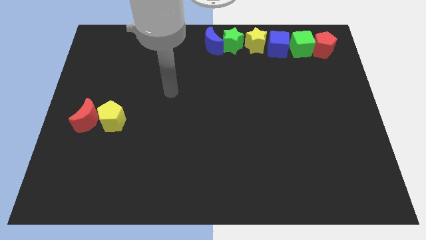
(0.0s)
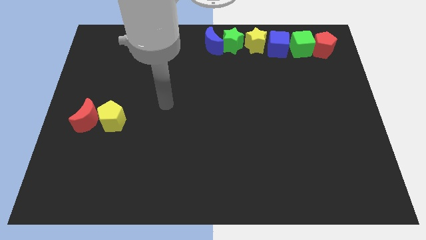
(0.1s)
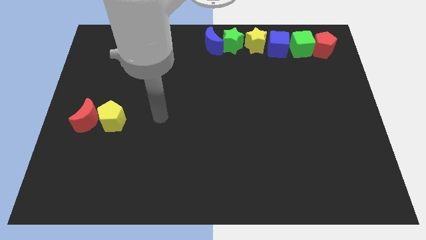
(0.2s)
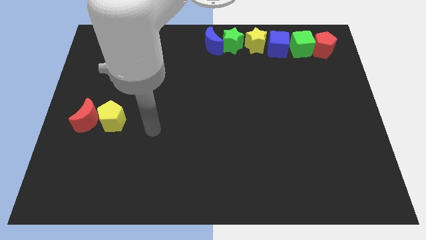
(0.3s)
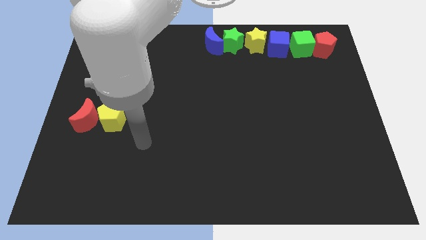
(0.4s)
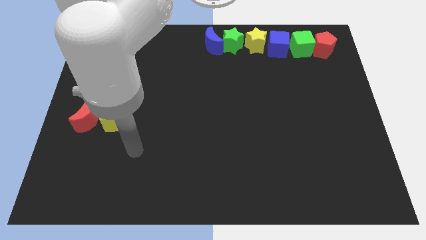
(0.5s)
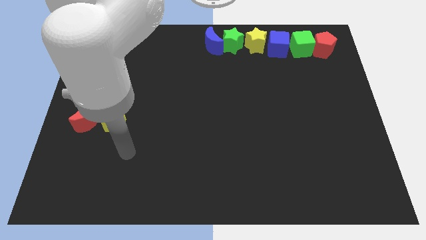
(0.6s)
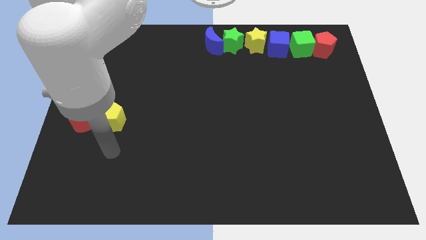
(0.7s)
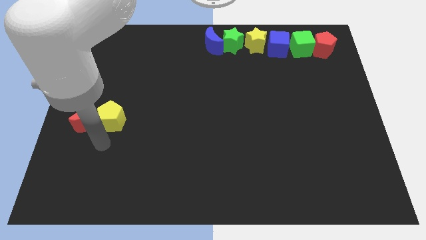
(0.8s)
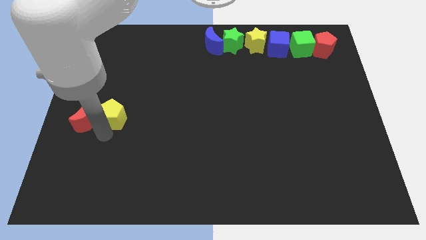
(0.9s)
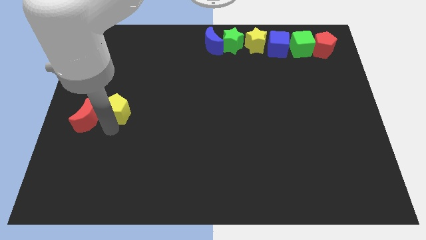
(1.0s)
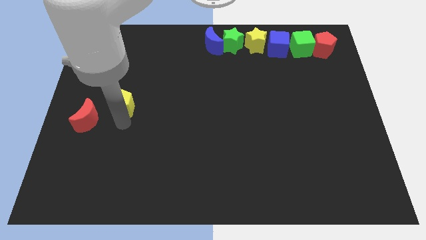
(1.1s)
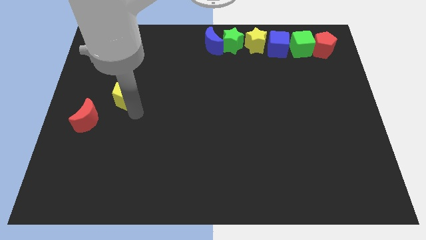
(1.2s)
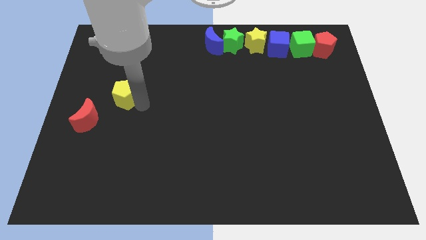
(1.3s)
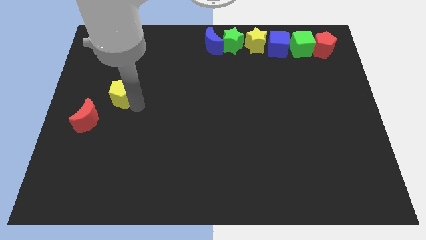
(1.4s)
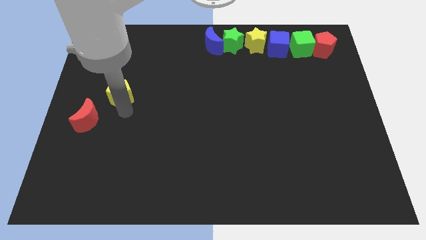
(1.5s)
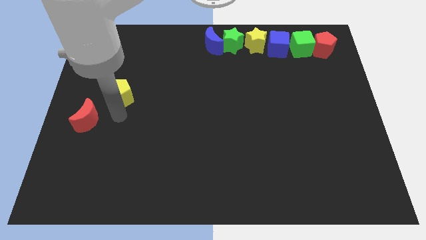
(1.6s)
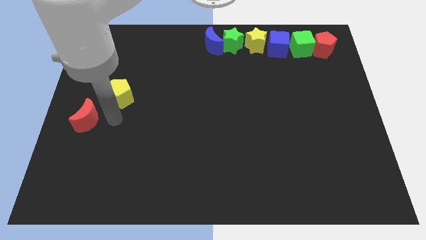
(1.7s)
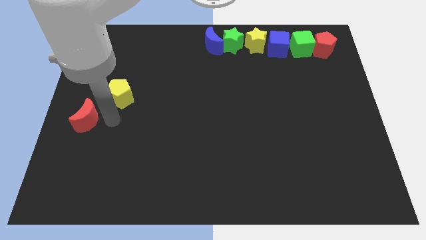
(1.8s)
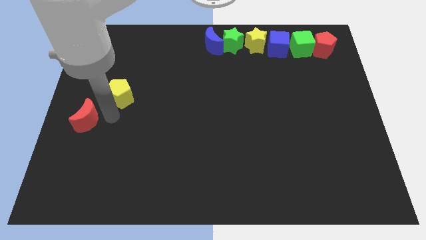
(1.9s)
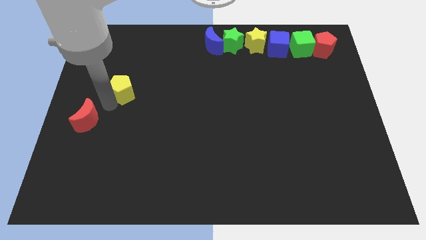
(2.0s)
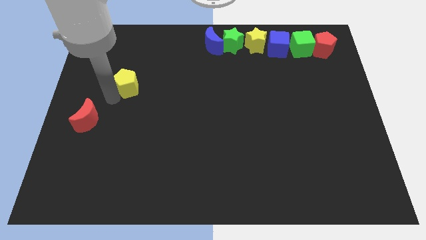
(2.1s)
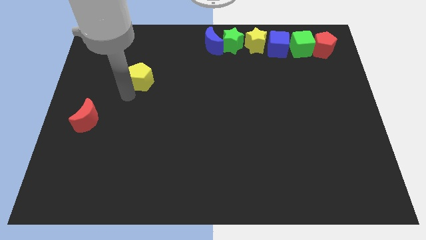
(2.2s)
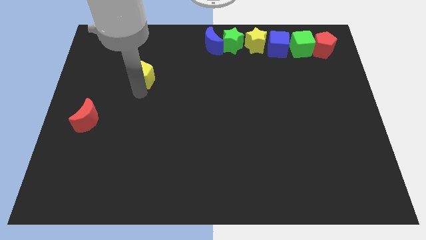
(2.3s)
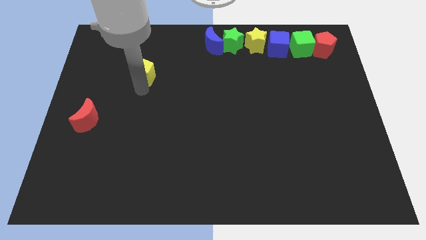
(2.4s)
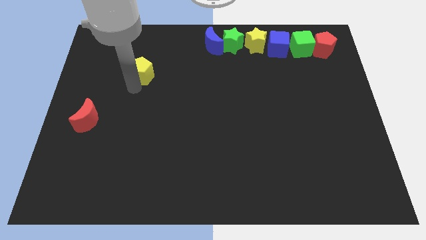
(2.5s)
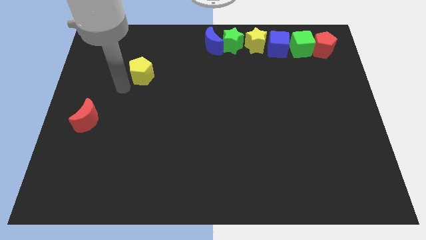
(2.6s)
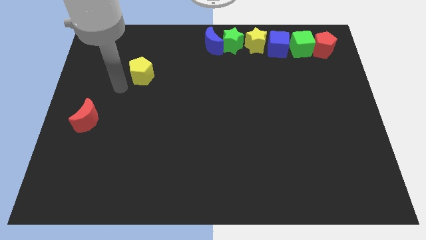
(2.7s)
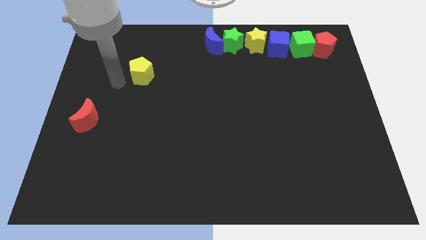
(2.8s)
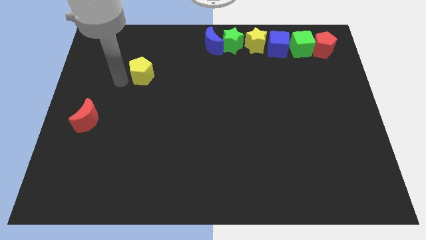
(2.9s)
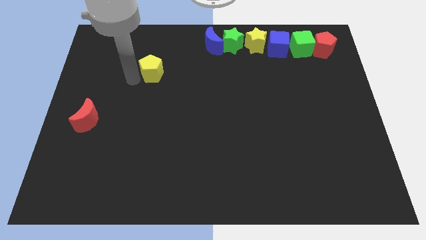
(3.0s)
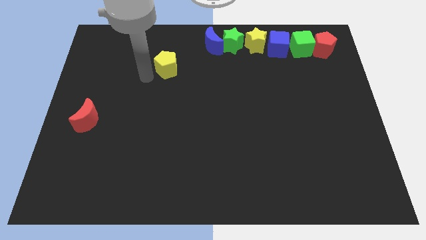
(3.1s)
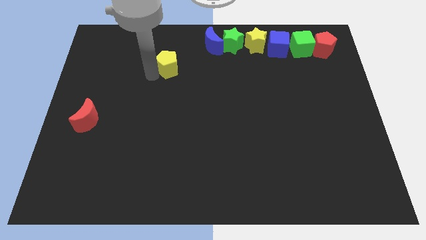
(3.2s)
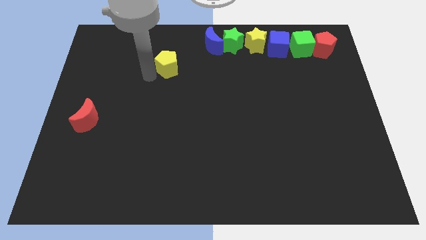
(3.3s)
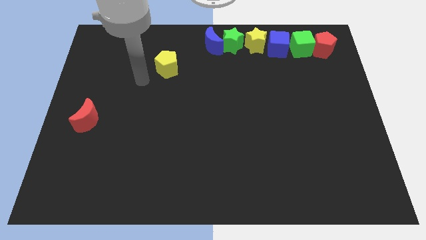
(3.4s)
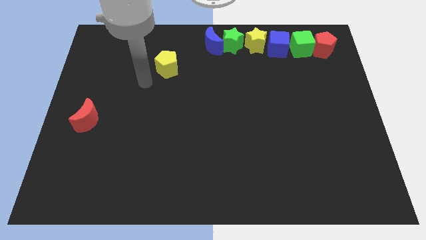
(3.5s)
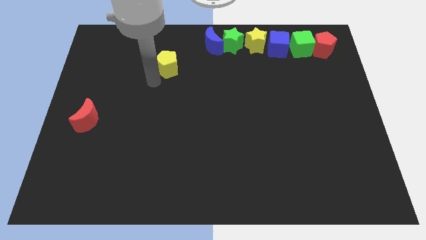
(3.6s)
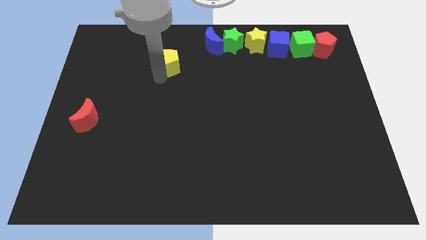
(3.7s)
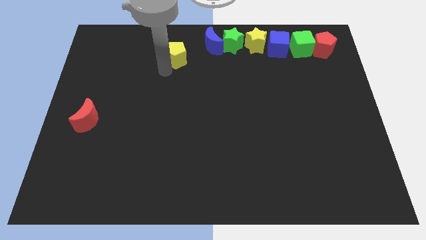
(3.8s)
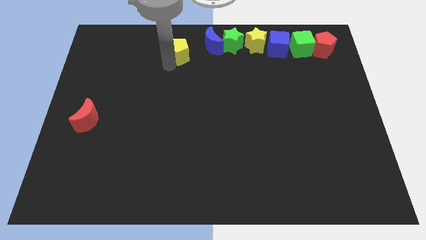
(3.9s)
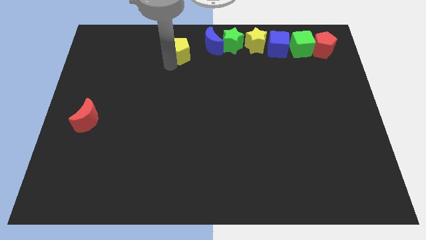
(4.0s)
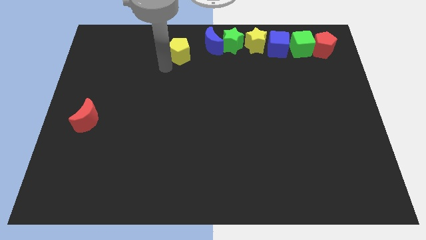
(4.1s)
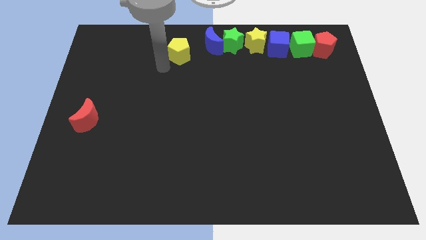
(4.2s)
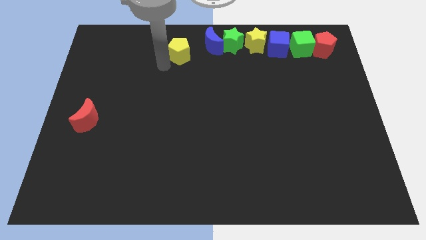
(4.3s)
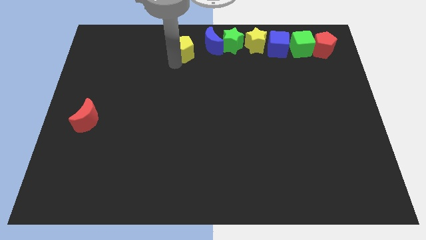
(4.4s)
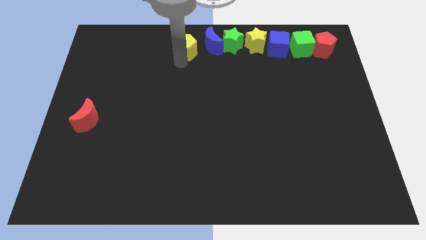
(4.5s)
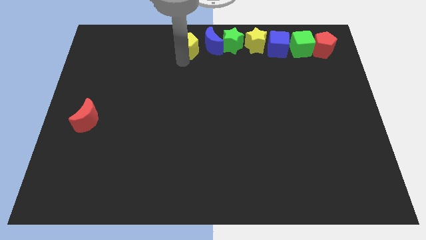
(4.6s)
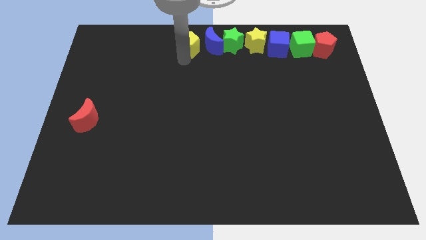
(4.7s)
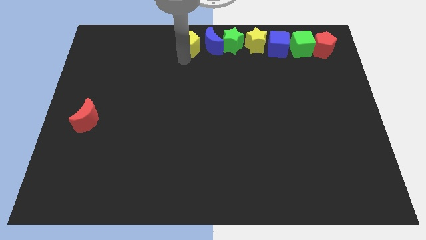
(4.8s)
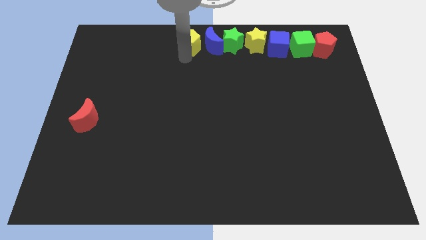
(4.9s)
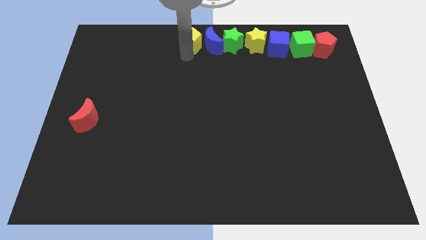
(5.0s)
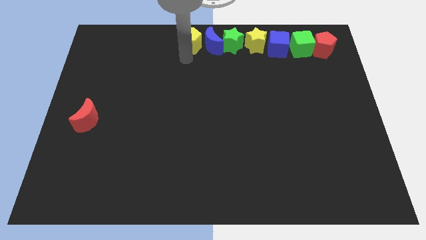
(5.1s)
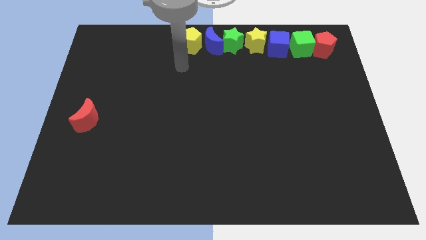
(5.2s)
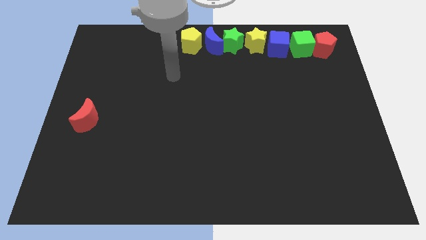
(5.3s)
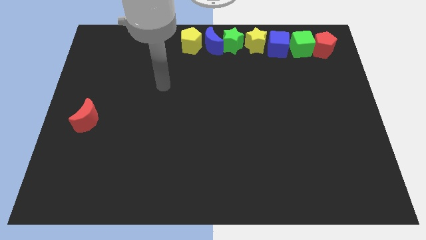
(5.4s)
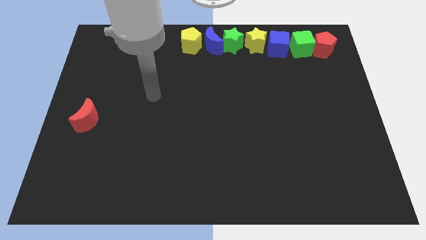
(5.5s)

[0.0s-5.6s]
drag the yellow pentagon to the left of the blue moon

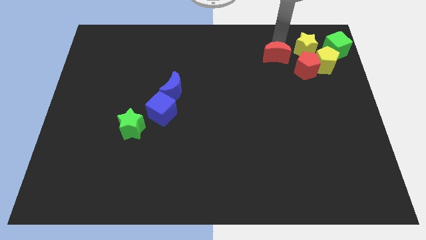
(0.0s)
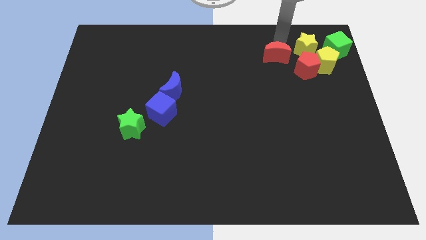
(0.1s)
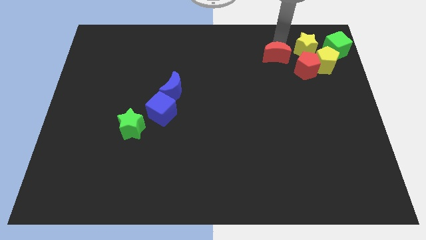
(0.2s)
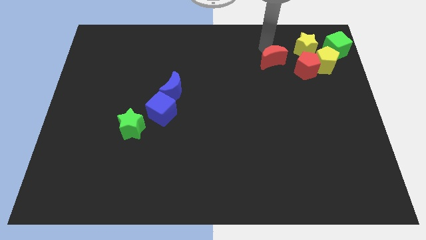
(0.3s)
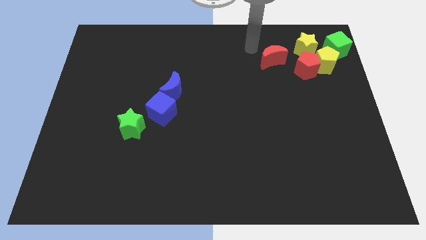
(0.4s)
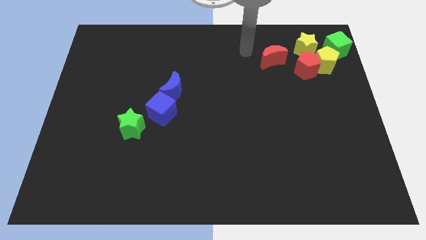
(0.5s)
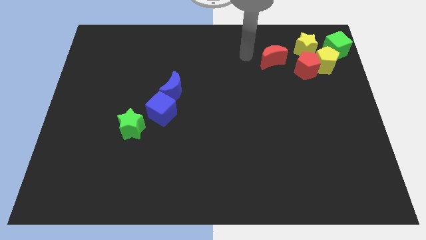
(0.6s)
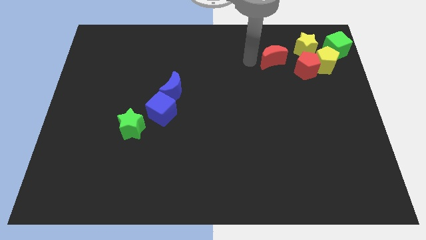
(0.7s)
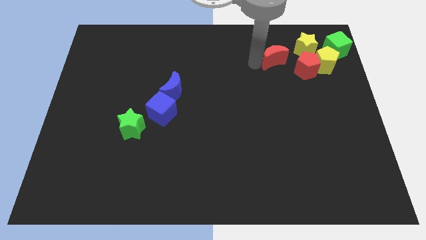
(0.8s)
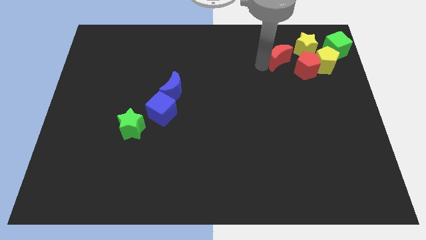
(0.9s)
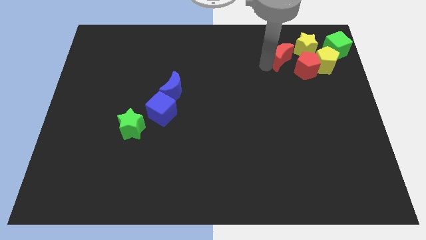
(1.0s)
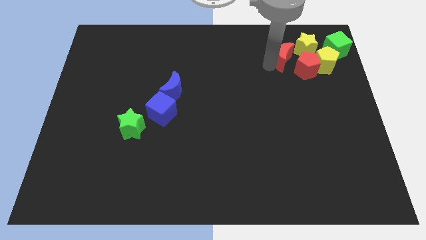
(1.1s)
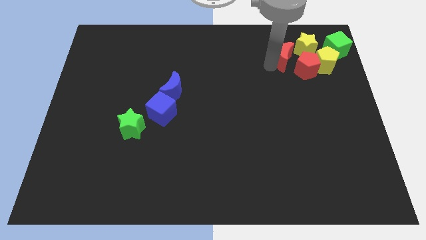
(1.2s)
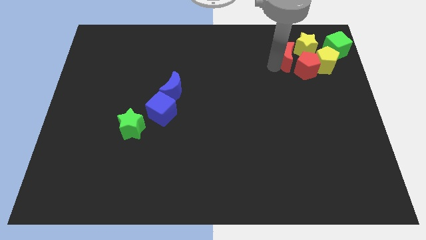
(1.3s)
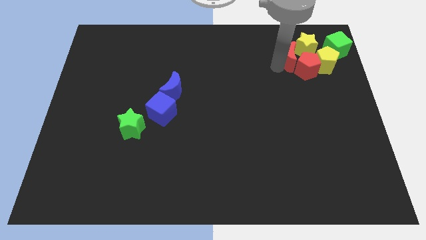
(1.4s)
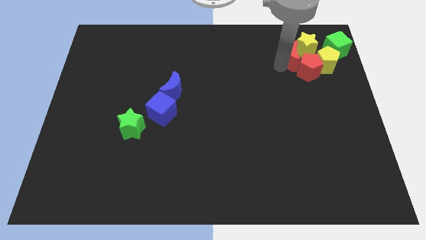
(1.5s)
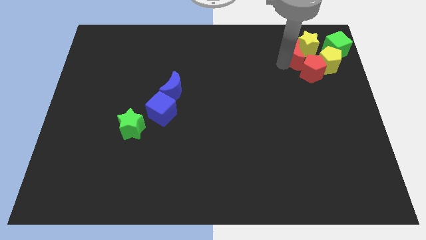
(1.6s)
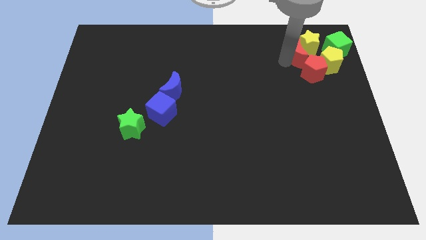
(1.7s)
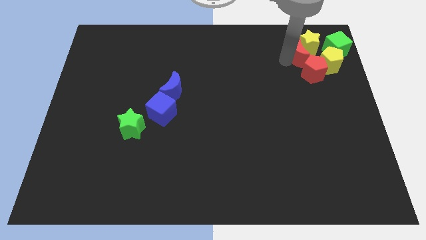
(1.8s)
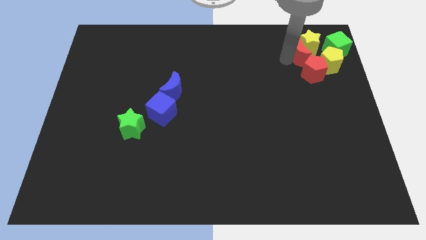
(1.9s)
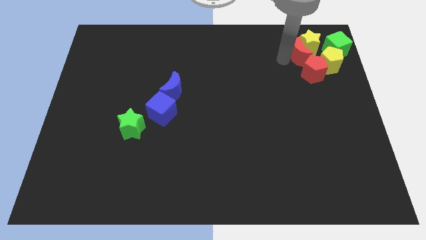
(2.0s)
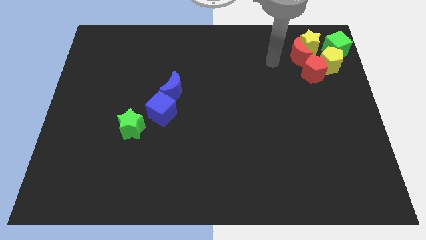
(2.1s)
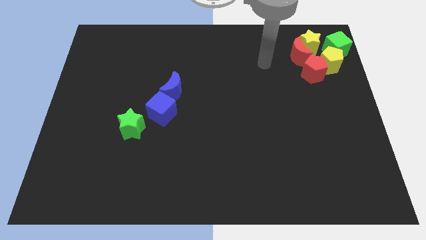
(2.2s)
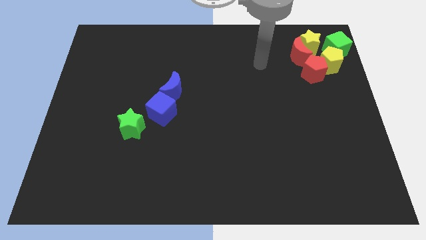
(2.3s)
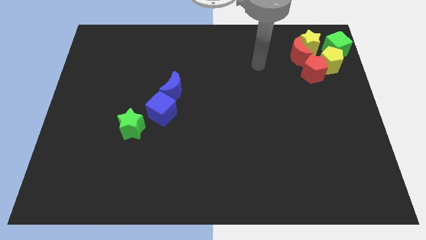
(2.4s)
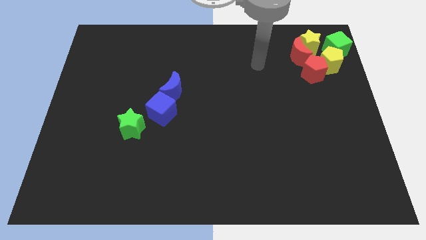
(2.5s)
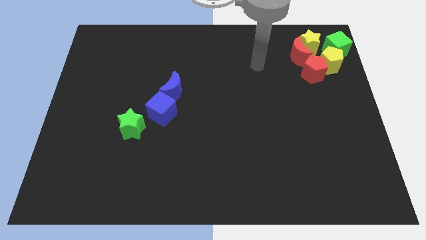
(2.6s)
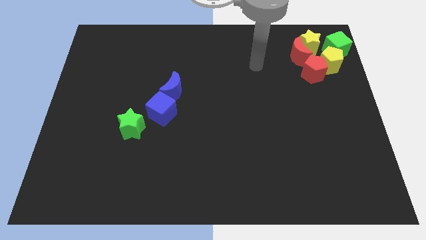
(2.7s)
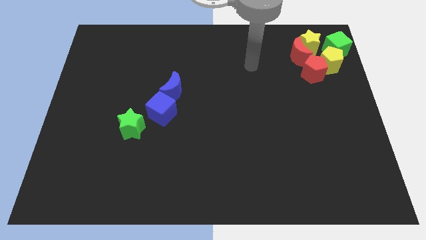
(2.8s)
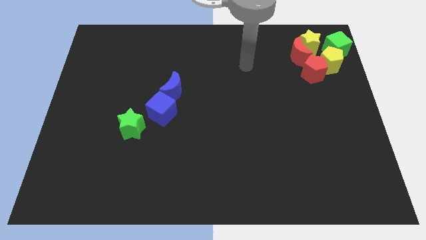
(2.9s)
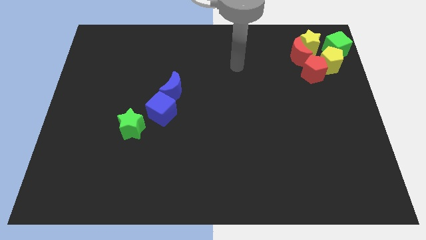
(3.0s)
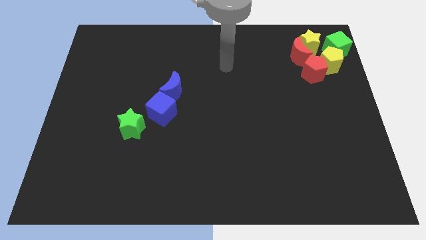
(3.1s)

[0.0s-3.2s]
push the red moon into the yellow star

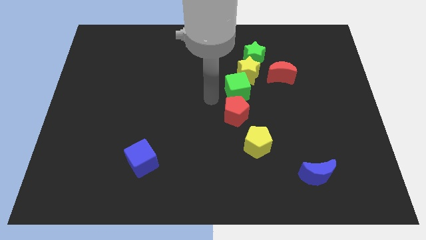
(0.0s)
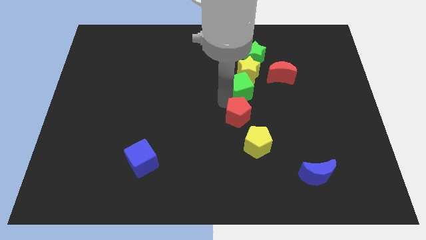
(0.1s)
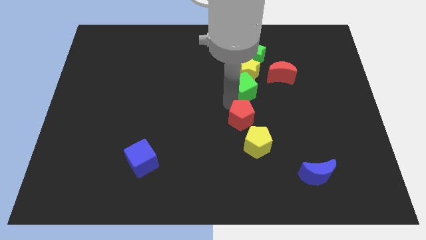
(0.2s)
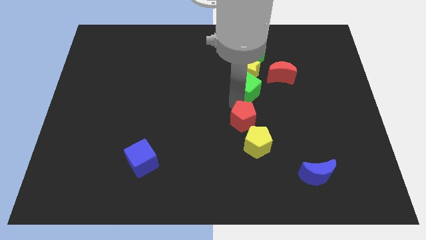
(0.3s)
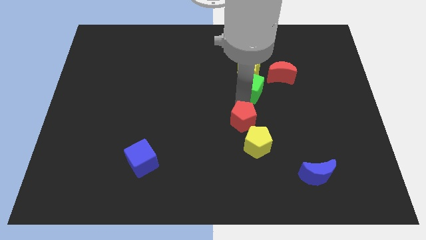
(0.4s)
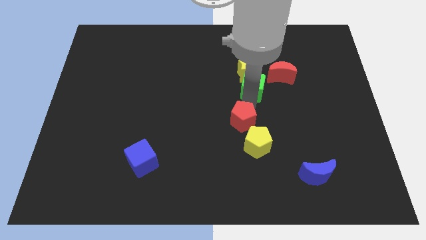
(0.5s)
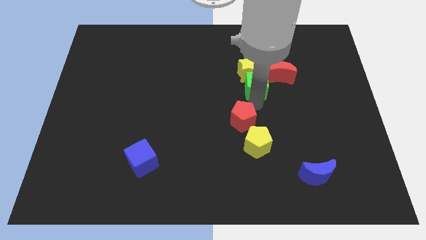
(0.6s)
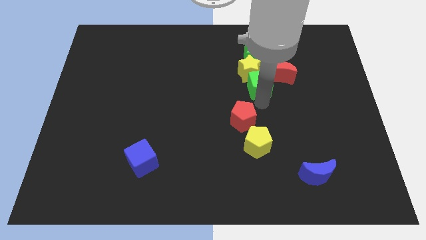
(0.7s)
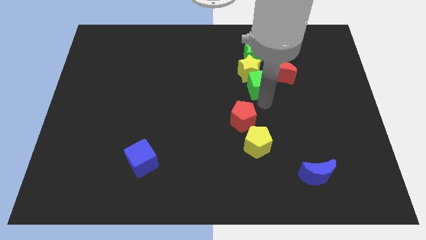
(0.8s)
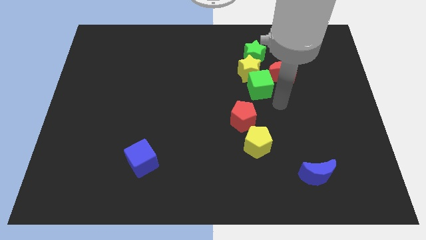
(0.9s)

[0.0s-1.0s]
push green cube towards its right
